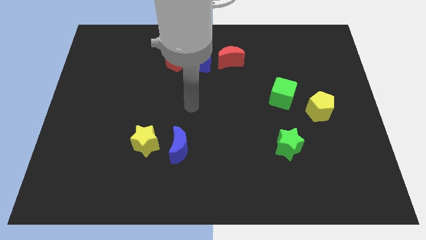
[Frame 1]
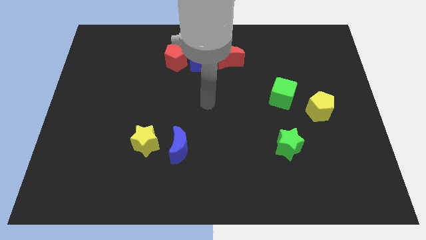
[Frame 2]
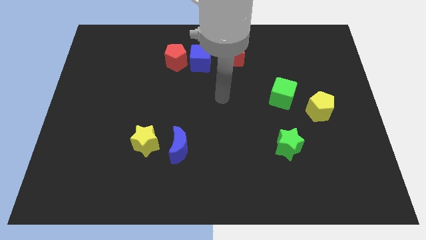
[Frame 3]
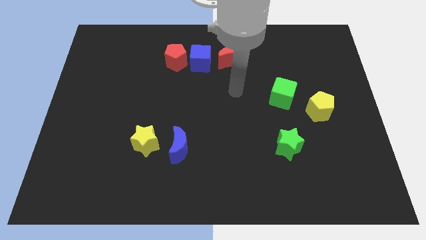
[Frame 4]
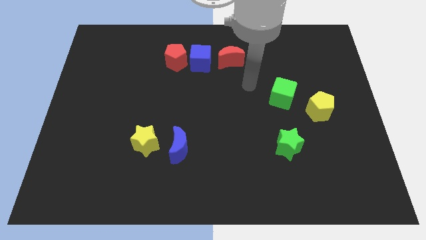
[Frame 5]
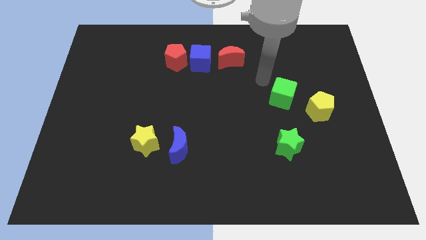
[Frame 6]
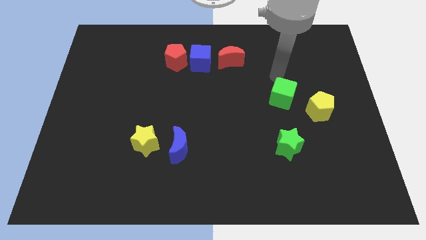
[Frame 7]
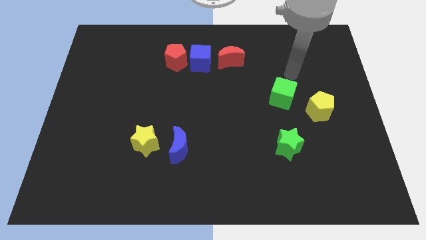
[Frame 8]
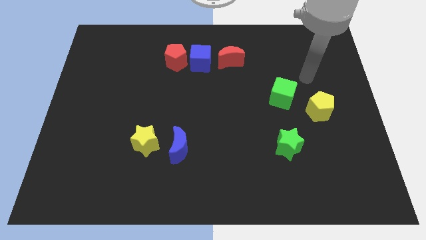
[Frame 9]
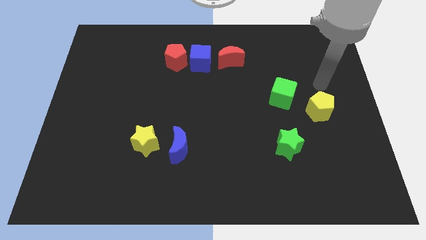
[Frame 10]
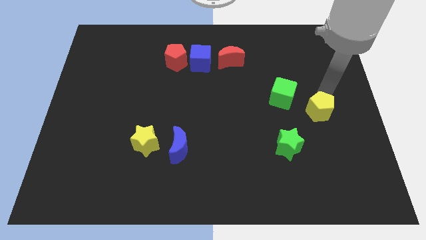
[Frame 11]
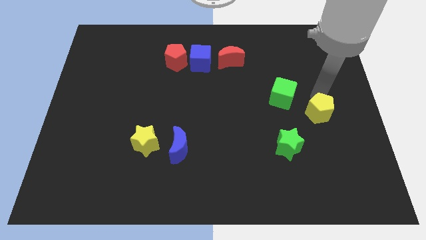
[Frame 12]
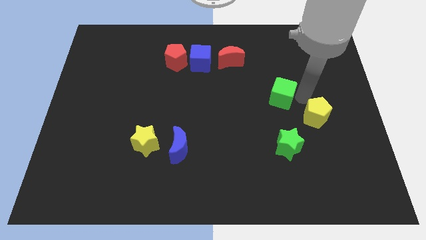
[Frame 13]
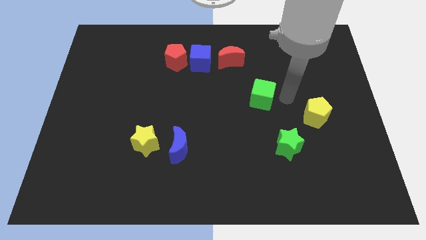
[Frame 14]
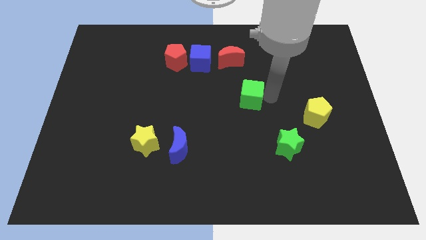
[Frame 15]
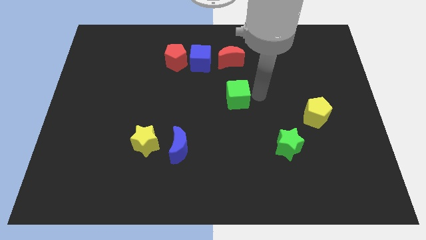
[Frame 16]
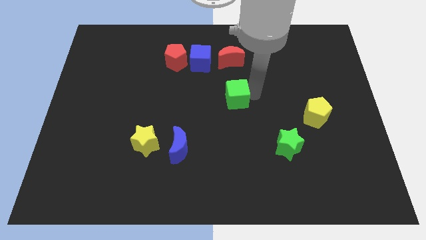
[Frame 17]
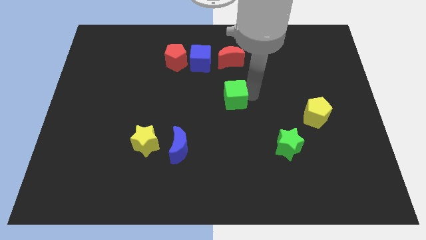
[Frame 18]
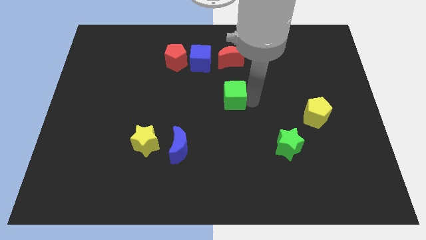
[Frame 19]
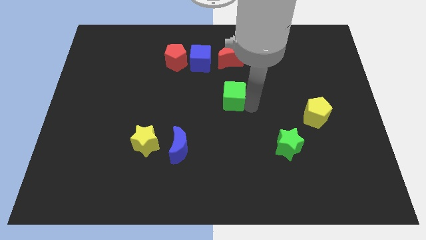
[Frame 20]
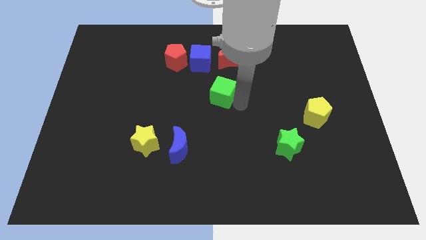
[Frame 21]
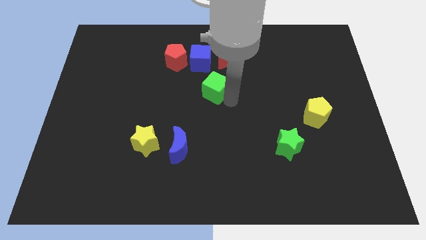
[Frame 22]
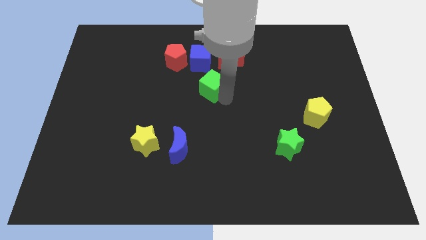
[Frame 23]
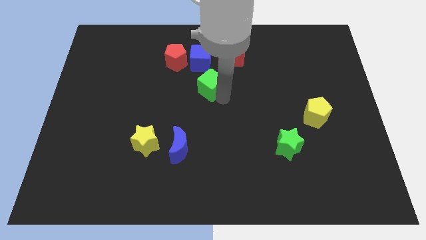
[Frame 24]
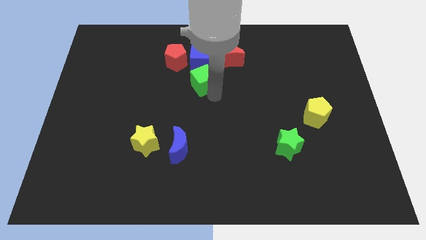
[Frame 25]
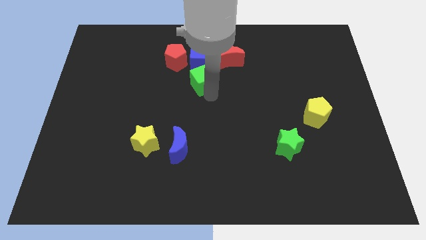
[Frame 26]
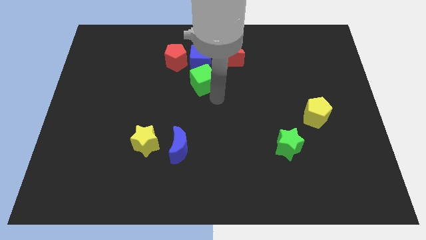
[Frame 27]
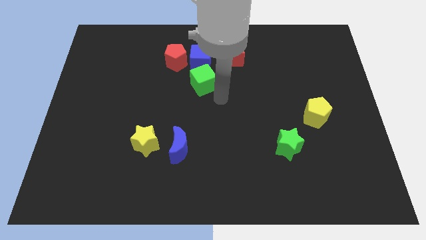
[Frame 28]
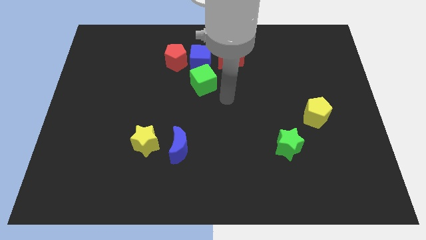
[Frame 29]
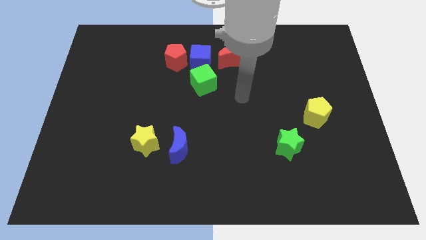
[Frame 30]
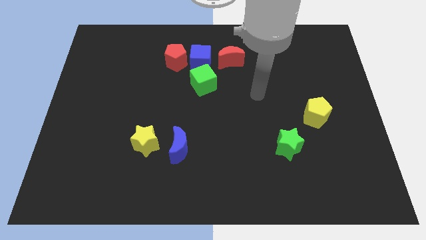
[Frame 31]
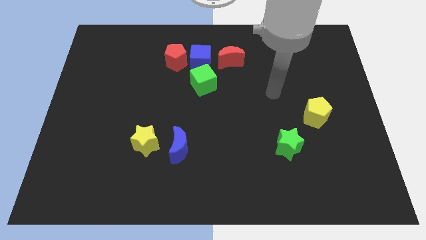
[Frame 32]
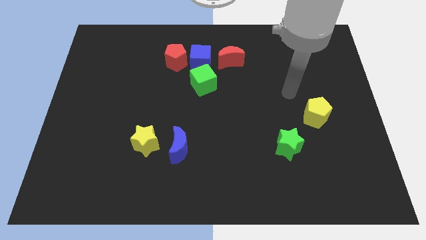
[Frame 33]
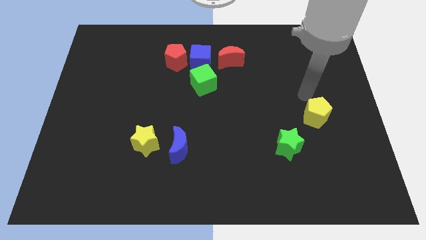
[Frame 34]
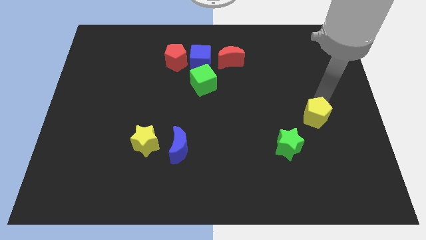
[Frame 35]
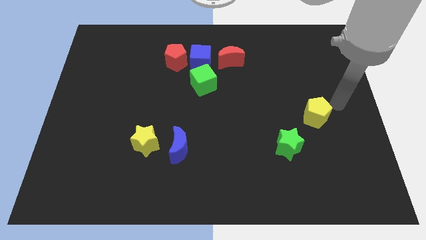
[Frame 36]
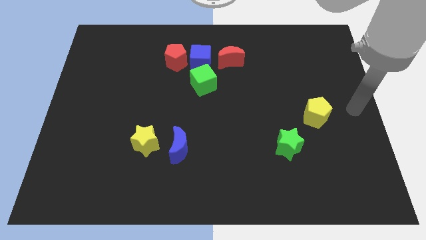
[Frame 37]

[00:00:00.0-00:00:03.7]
move the green cube into the blue cube

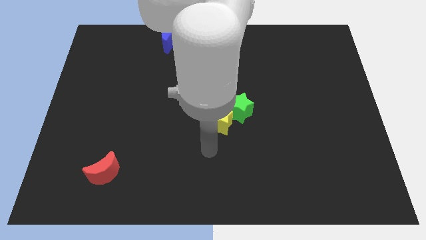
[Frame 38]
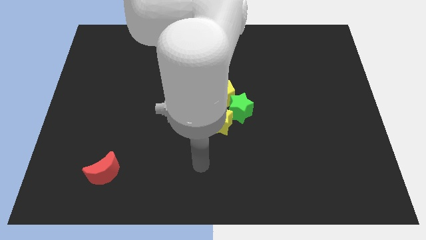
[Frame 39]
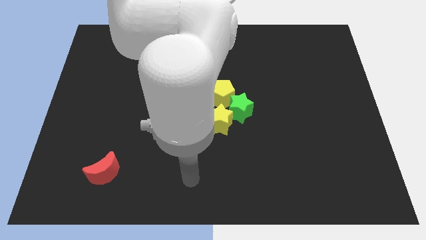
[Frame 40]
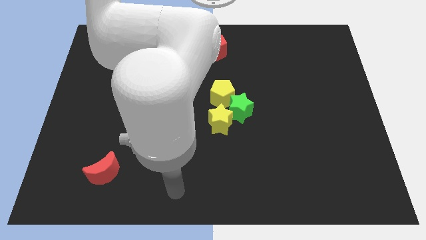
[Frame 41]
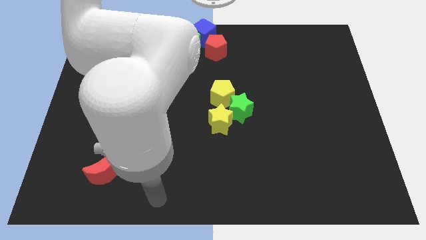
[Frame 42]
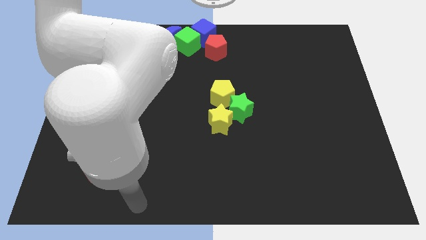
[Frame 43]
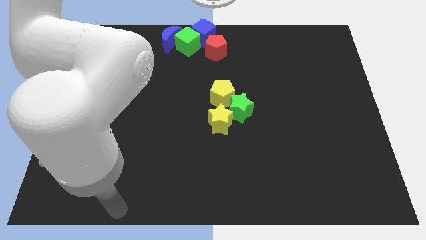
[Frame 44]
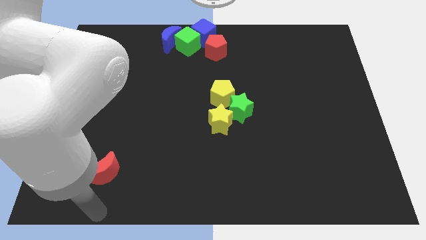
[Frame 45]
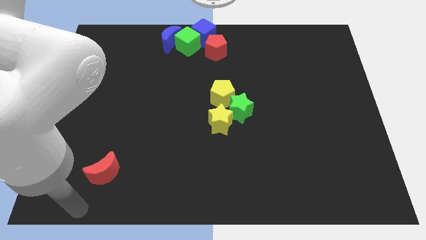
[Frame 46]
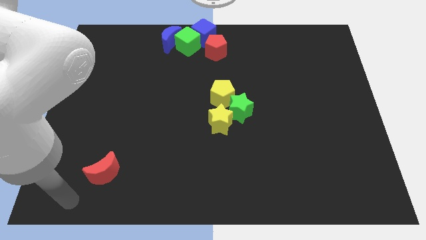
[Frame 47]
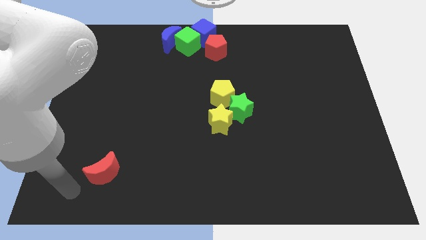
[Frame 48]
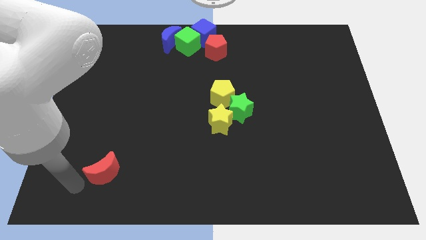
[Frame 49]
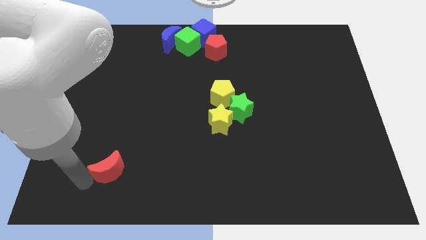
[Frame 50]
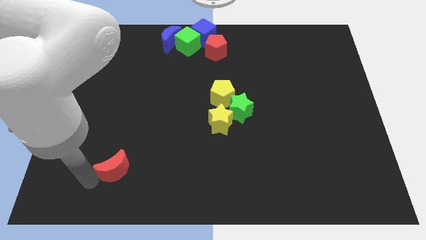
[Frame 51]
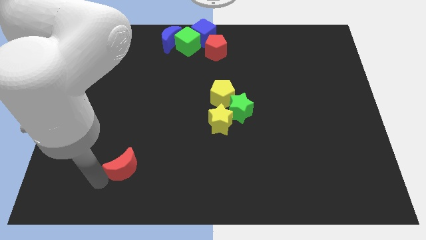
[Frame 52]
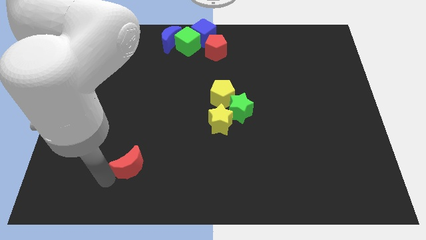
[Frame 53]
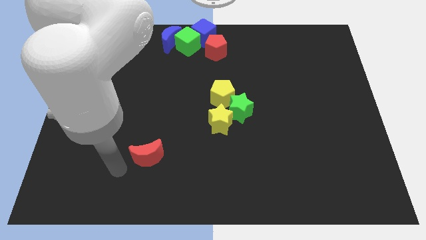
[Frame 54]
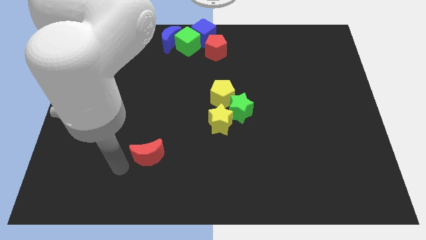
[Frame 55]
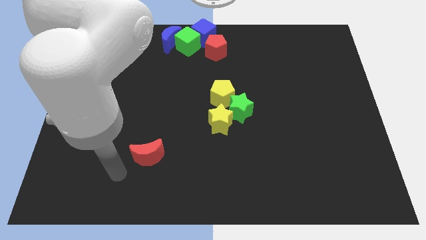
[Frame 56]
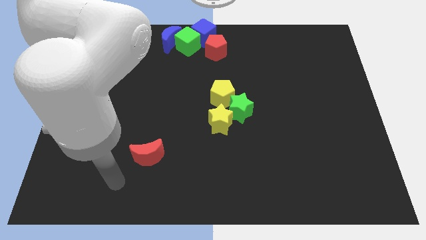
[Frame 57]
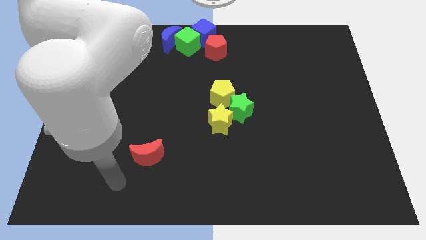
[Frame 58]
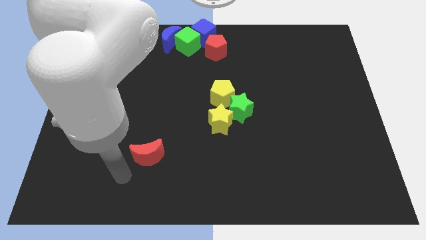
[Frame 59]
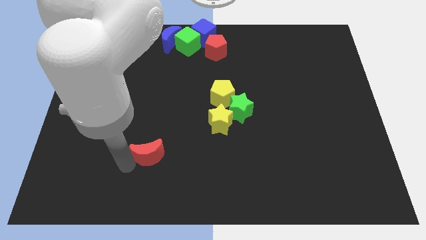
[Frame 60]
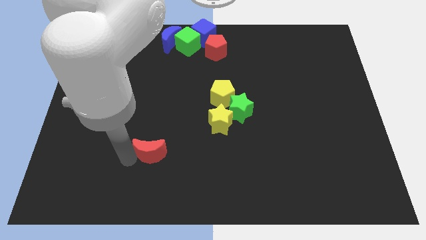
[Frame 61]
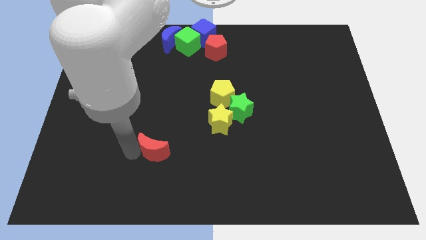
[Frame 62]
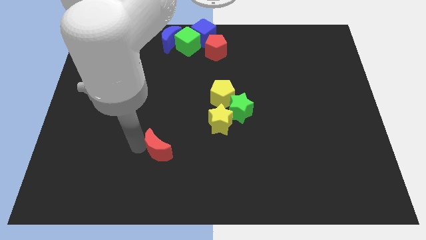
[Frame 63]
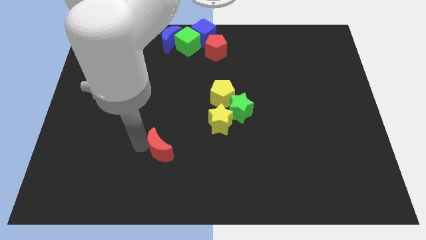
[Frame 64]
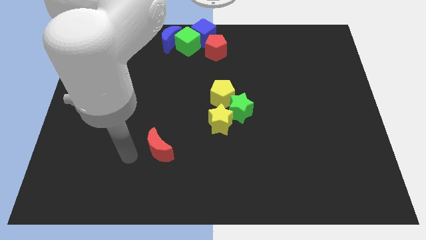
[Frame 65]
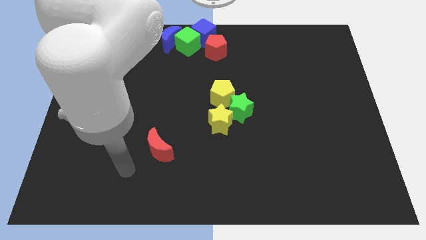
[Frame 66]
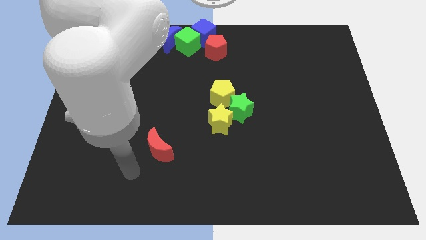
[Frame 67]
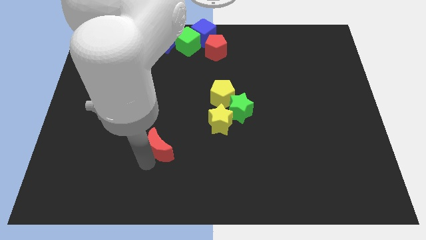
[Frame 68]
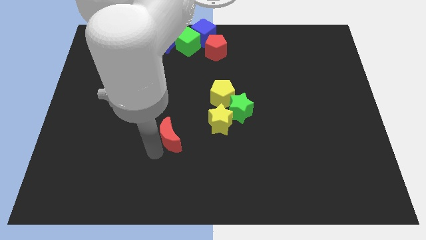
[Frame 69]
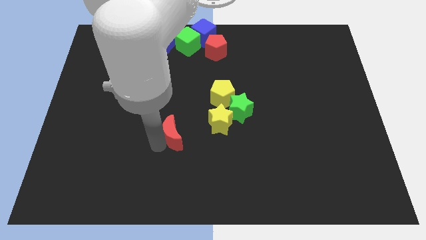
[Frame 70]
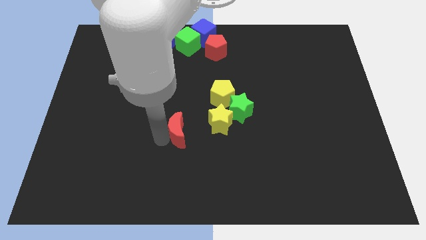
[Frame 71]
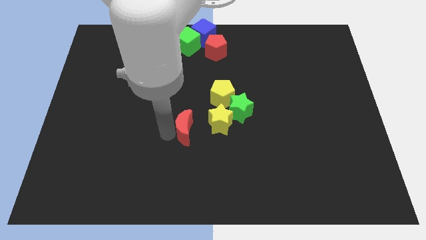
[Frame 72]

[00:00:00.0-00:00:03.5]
move the red moon towards the yellow star

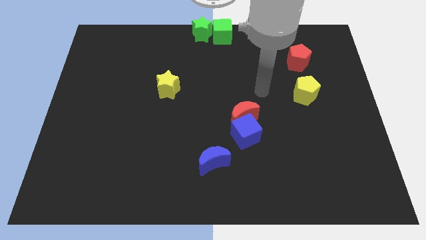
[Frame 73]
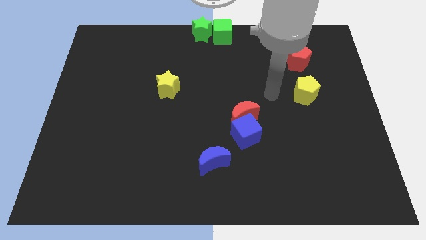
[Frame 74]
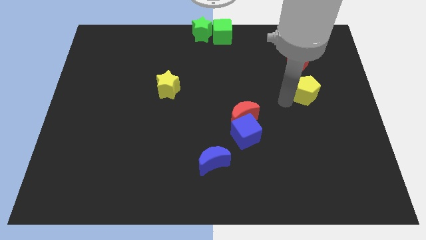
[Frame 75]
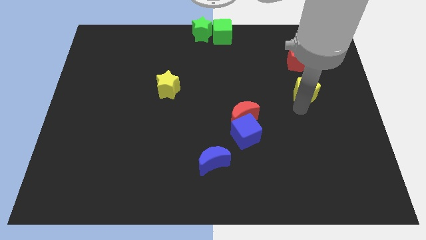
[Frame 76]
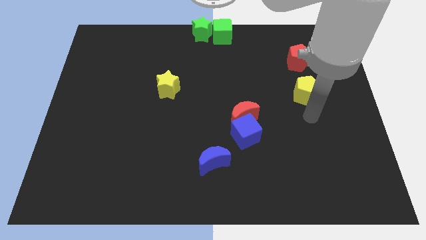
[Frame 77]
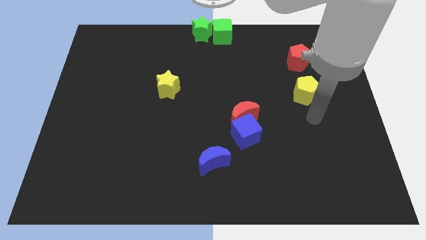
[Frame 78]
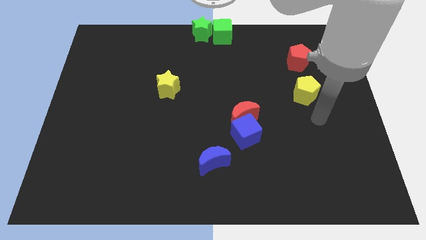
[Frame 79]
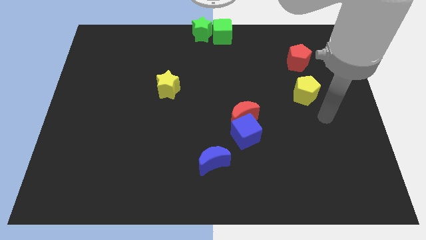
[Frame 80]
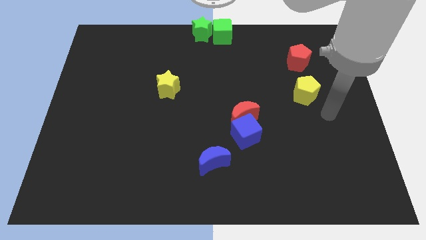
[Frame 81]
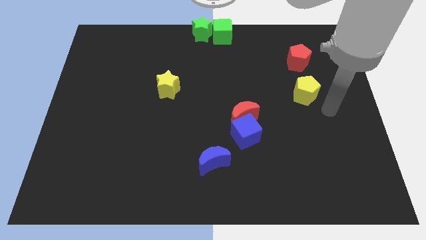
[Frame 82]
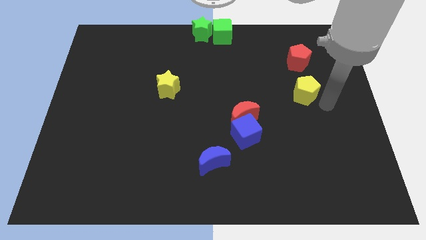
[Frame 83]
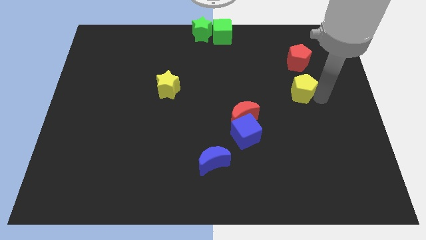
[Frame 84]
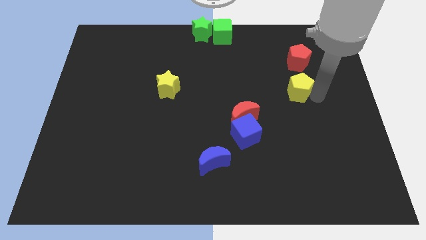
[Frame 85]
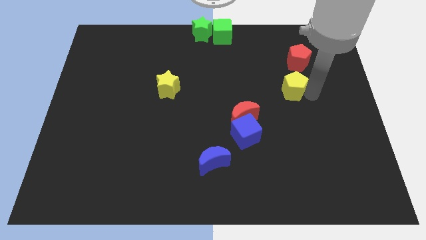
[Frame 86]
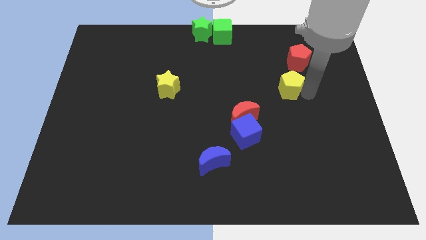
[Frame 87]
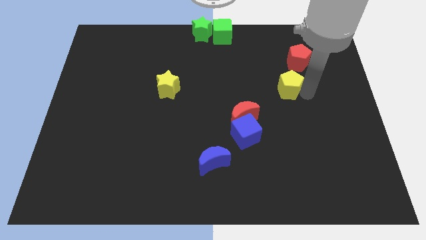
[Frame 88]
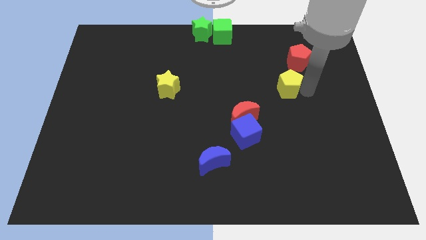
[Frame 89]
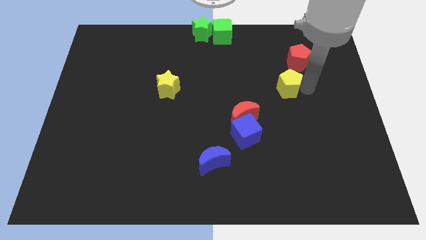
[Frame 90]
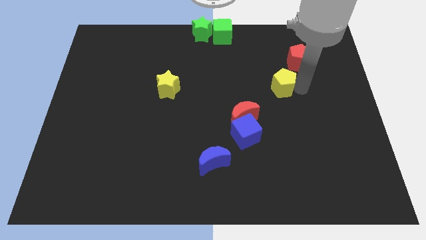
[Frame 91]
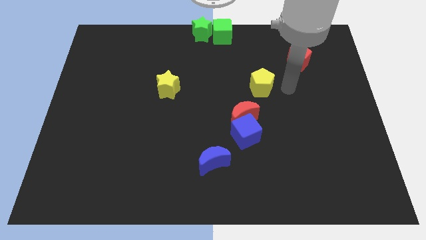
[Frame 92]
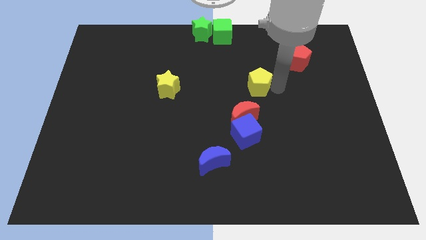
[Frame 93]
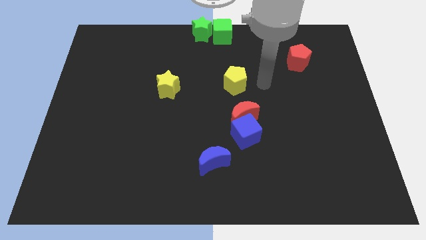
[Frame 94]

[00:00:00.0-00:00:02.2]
push the yellow pentagon to the top of the red crescent
